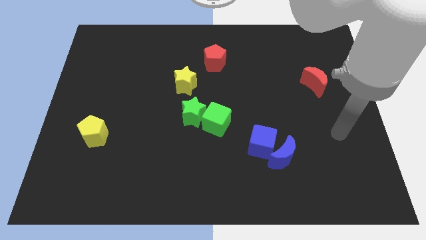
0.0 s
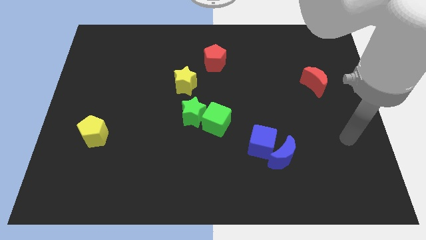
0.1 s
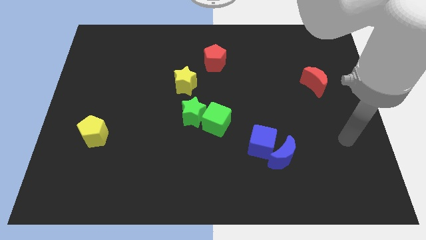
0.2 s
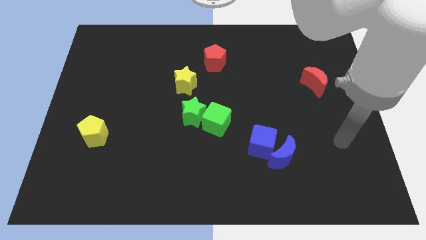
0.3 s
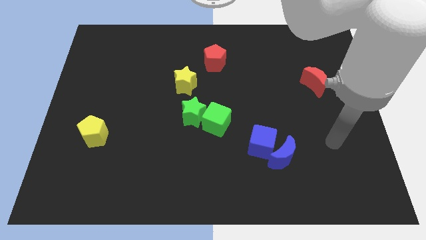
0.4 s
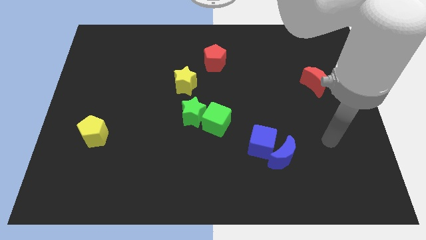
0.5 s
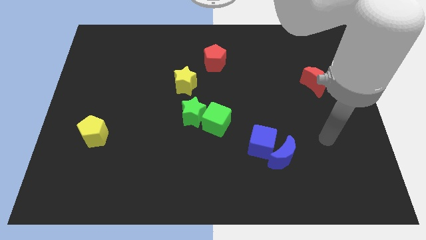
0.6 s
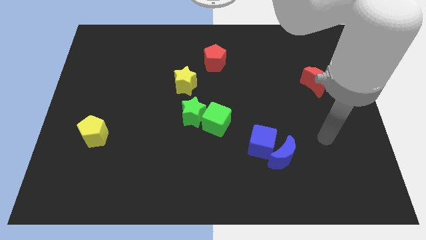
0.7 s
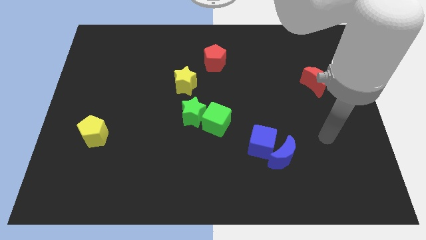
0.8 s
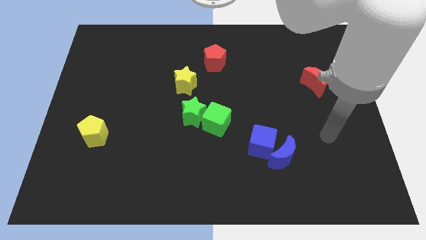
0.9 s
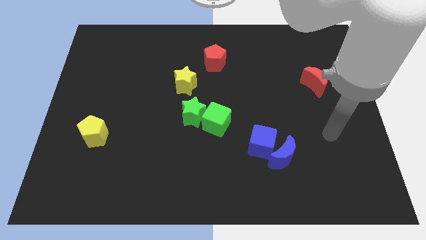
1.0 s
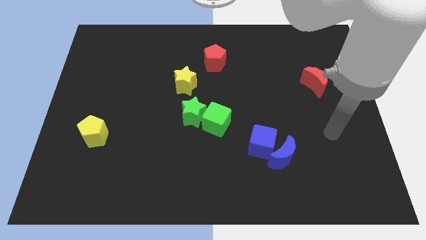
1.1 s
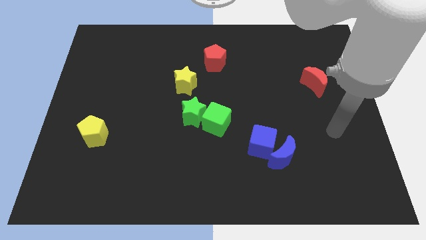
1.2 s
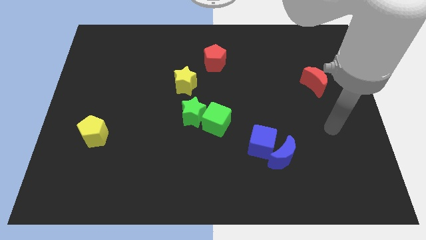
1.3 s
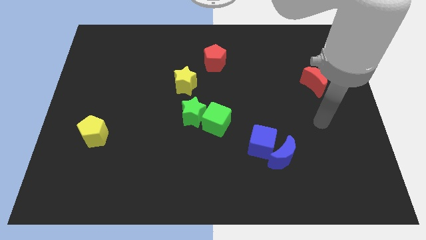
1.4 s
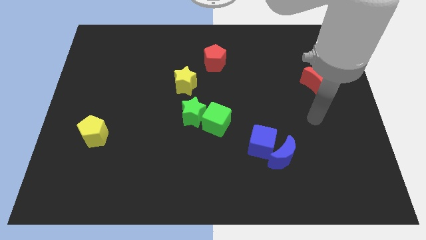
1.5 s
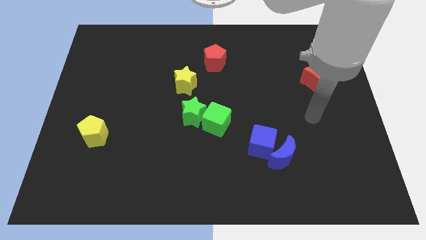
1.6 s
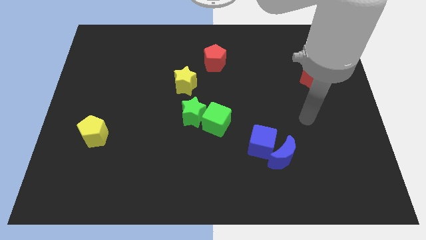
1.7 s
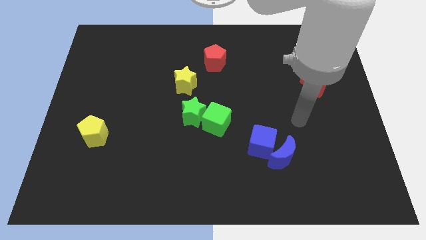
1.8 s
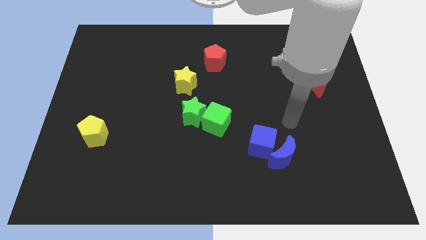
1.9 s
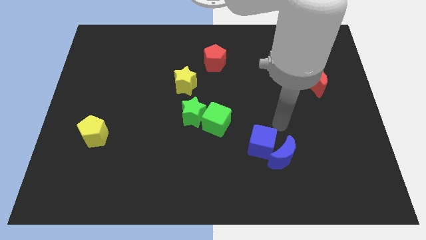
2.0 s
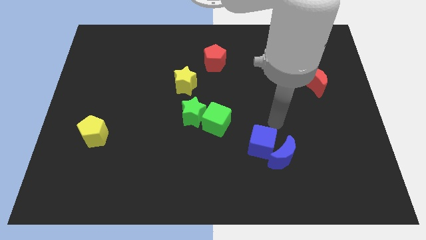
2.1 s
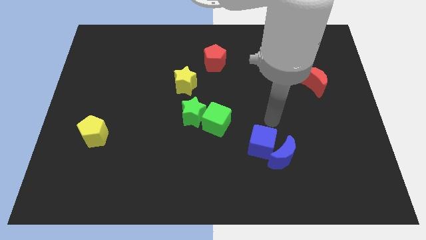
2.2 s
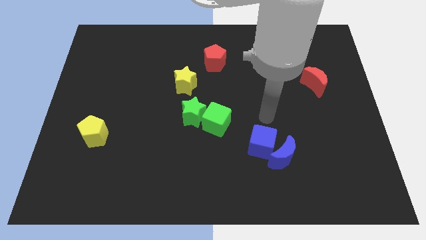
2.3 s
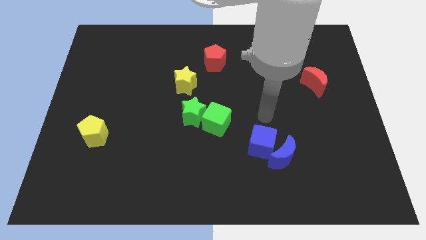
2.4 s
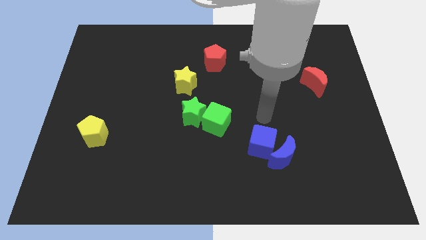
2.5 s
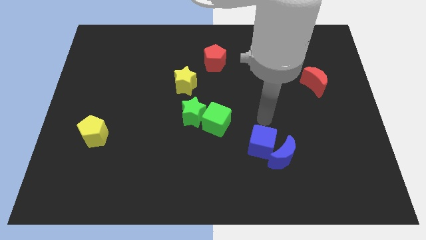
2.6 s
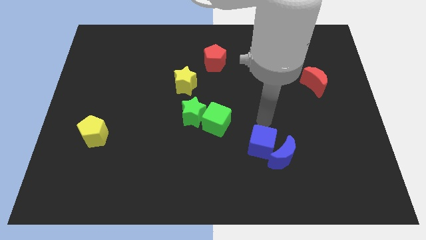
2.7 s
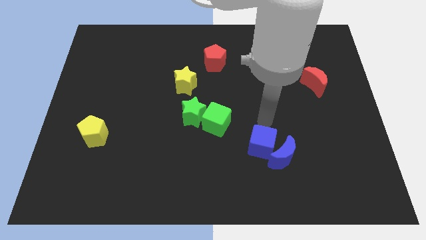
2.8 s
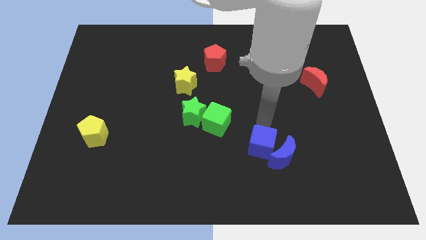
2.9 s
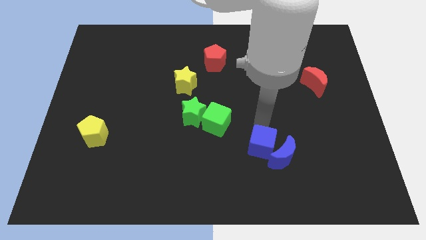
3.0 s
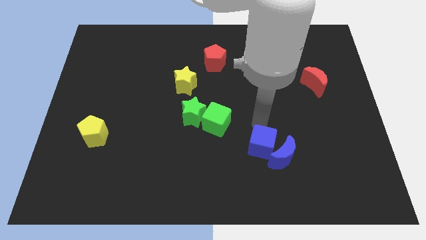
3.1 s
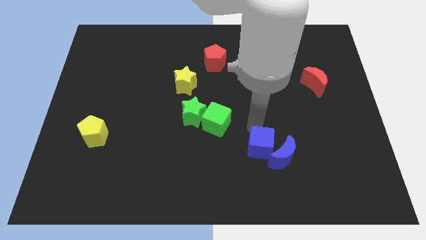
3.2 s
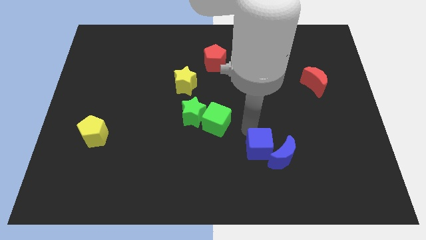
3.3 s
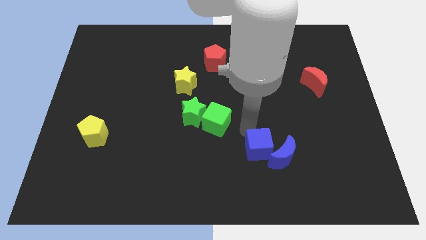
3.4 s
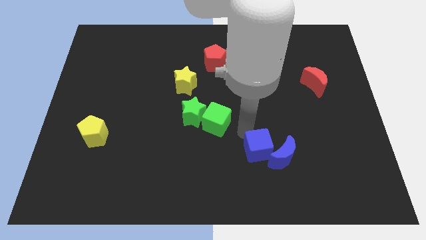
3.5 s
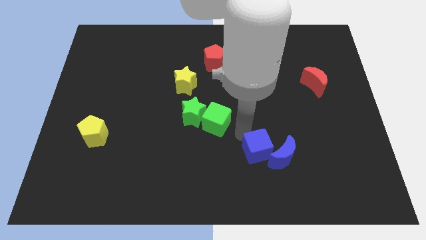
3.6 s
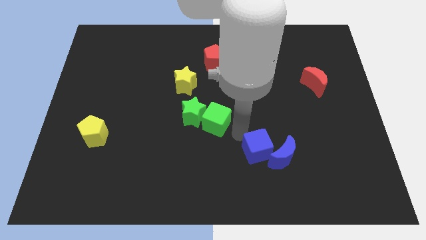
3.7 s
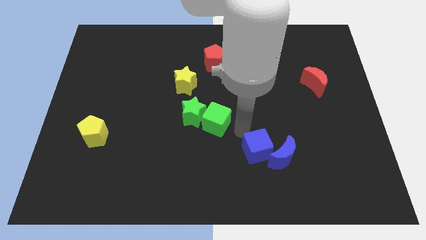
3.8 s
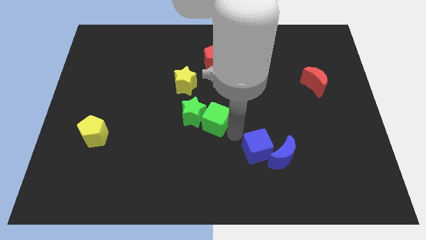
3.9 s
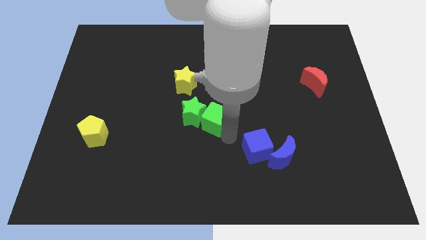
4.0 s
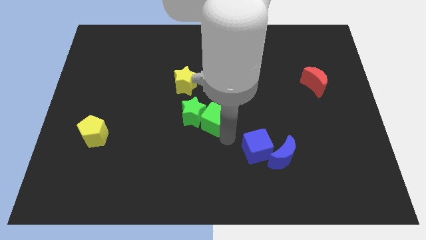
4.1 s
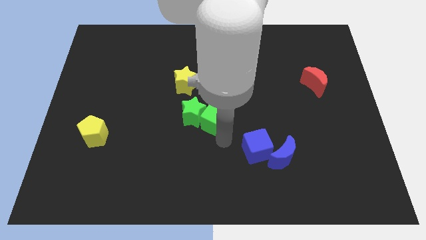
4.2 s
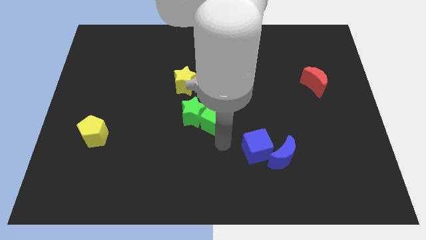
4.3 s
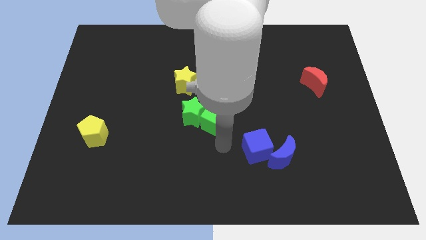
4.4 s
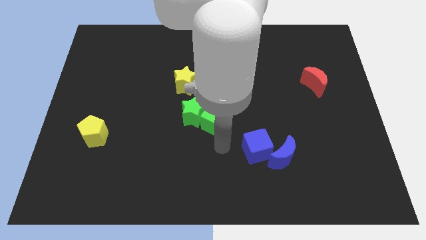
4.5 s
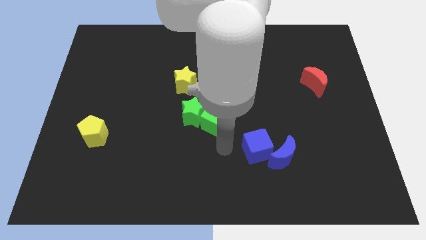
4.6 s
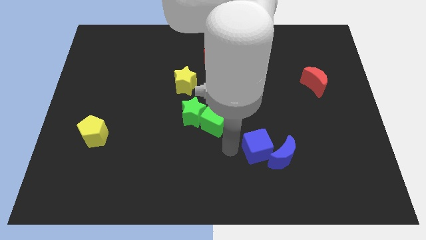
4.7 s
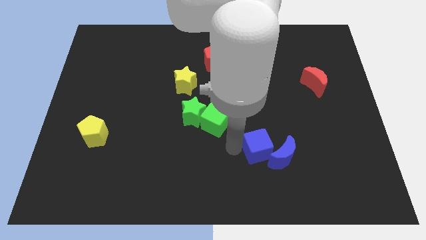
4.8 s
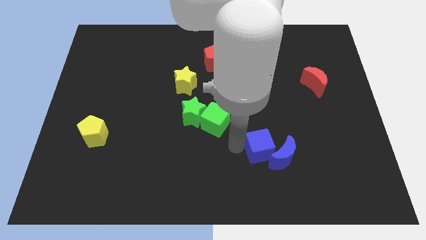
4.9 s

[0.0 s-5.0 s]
move your arm towards the blue cube

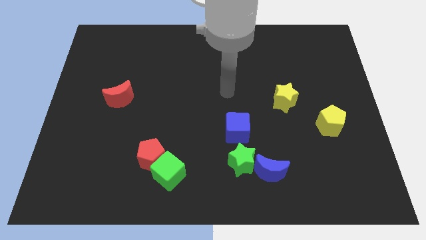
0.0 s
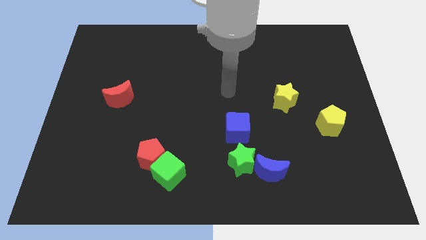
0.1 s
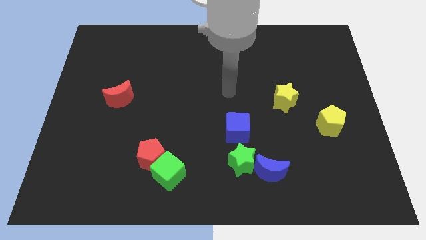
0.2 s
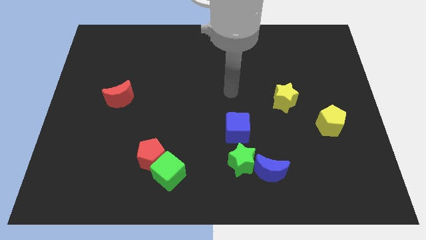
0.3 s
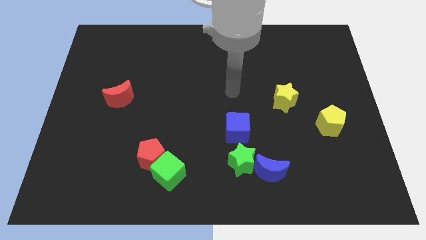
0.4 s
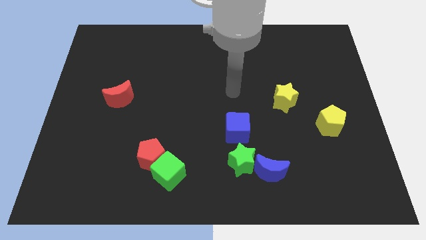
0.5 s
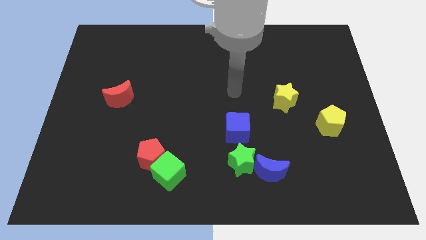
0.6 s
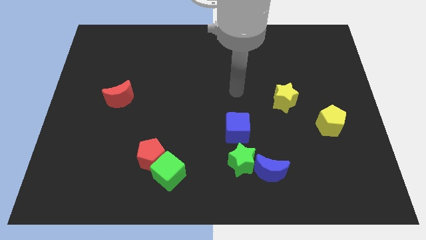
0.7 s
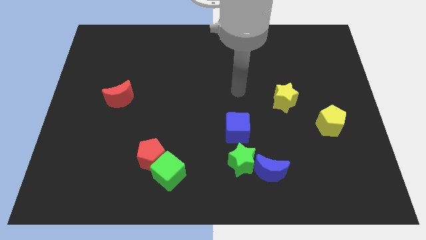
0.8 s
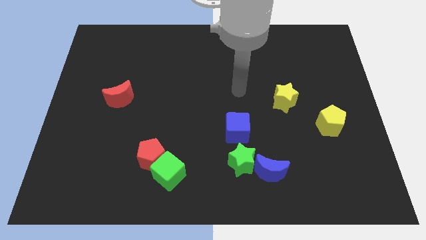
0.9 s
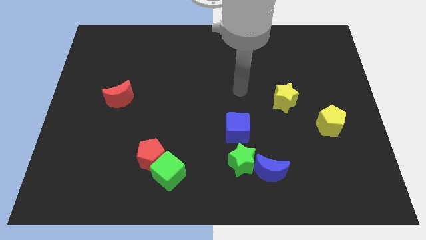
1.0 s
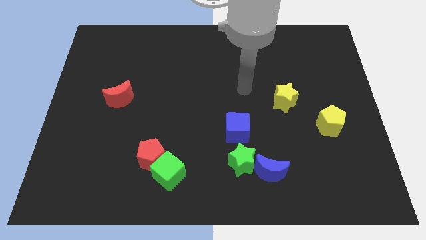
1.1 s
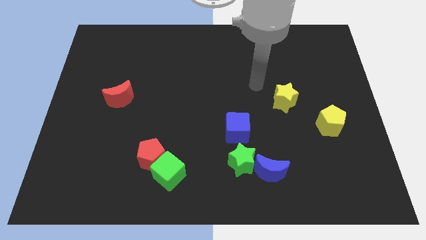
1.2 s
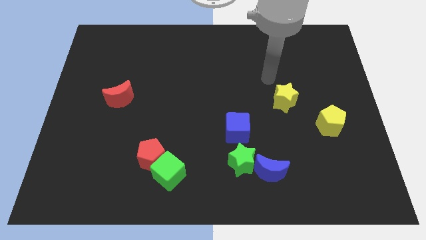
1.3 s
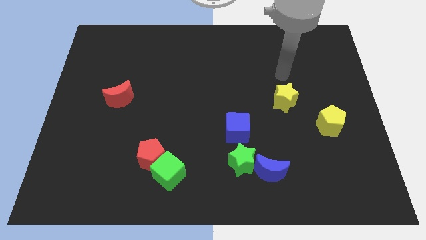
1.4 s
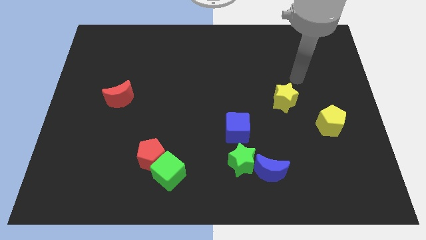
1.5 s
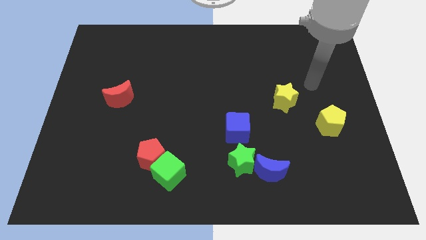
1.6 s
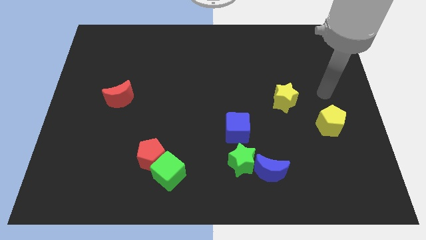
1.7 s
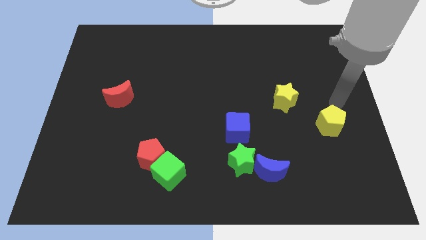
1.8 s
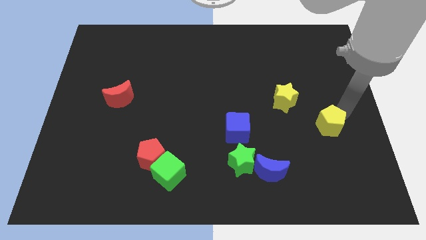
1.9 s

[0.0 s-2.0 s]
place your arm to the top right of the yellow pentagon

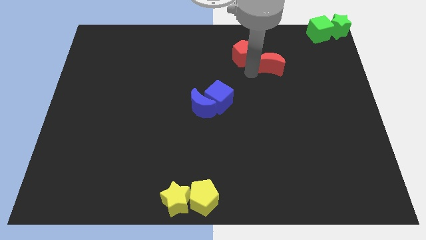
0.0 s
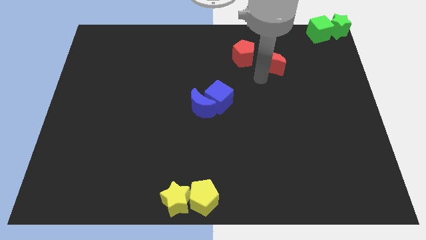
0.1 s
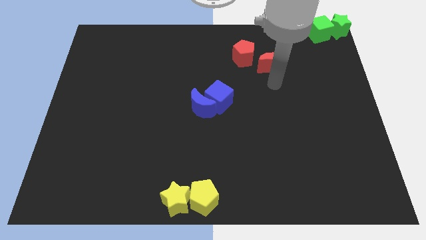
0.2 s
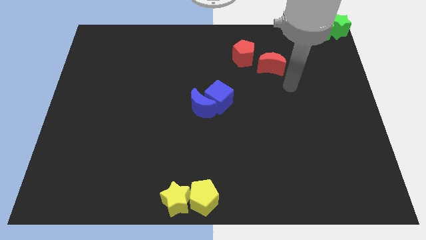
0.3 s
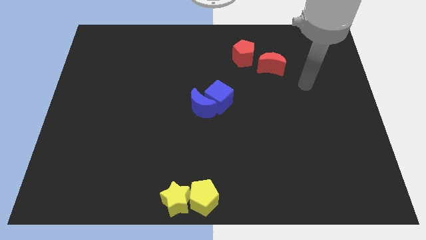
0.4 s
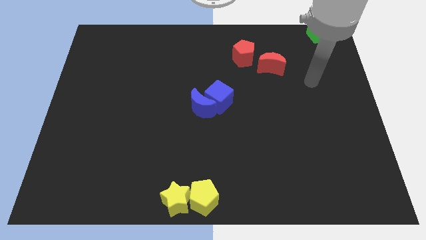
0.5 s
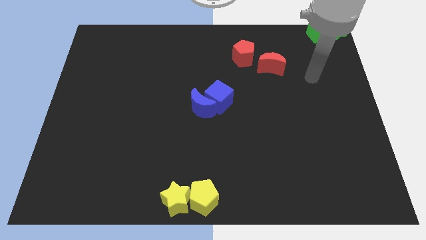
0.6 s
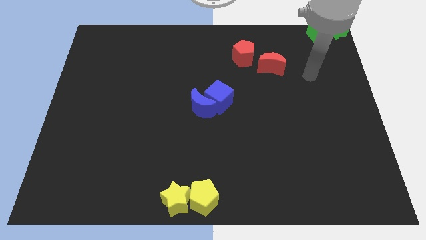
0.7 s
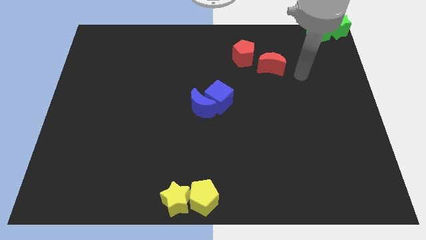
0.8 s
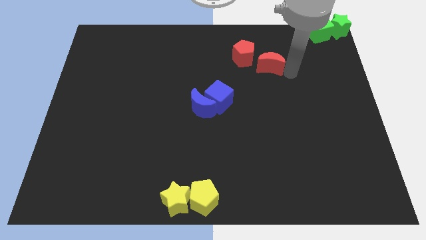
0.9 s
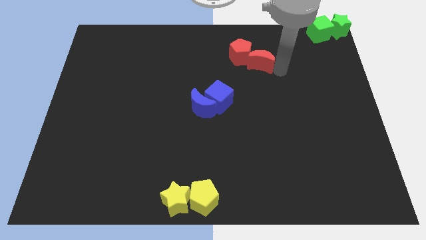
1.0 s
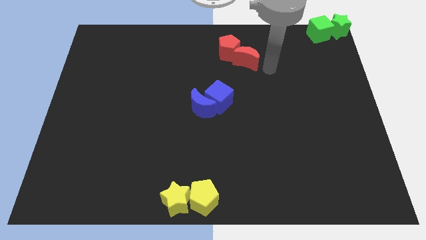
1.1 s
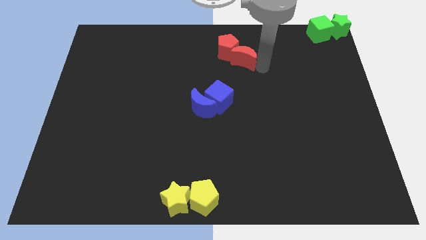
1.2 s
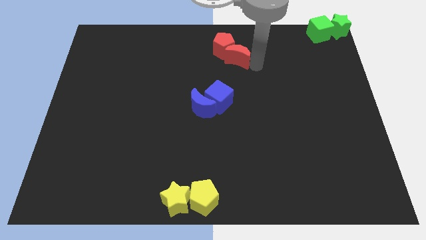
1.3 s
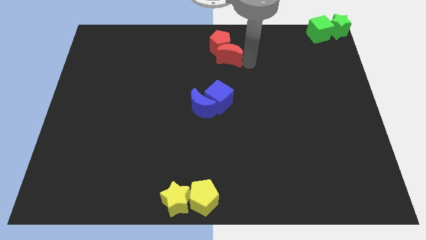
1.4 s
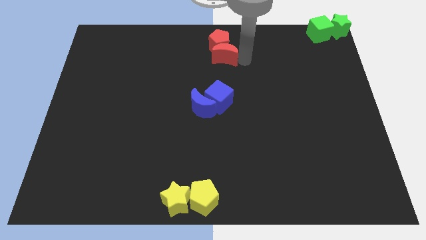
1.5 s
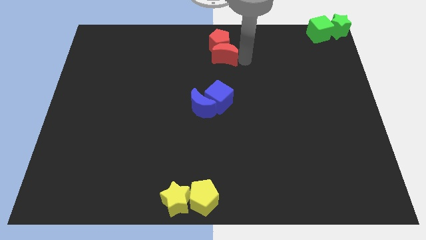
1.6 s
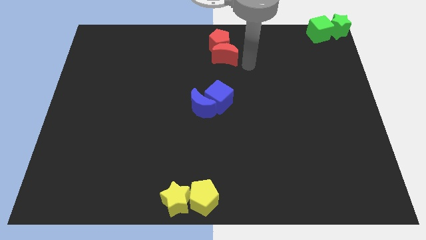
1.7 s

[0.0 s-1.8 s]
push the red blocks to the top center

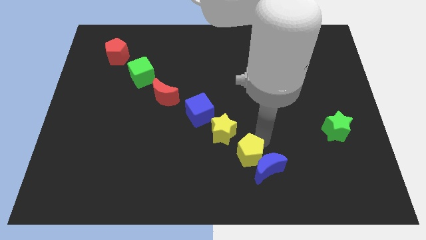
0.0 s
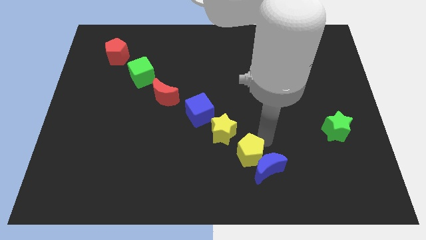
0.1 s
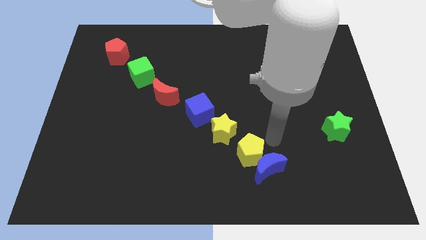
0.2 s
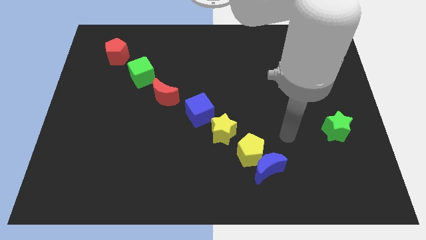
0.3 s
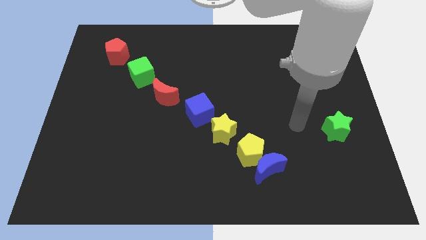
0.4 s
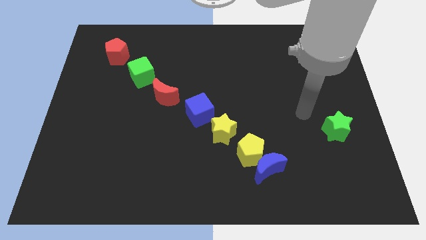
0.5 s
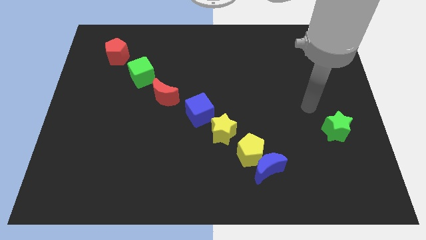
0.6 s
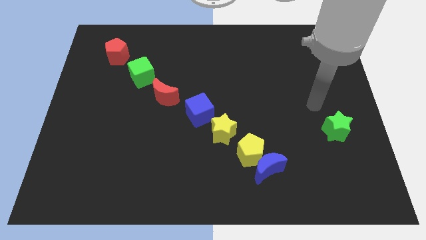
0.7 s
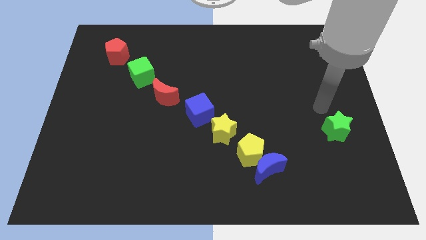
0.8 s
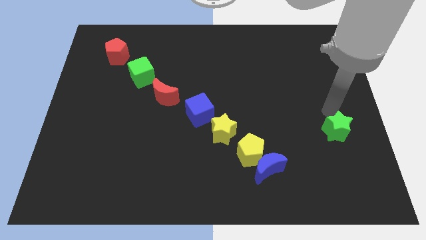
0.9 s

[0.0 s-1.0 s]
move the arm away from the yellow pentagon
